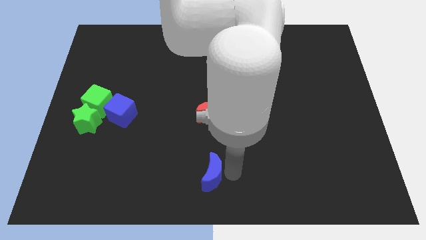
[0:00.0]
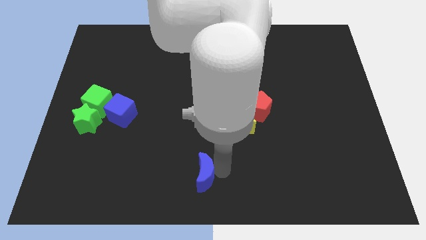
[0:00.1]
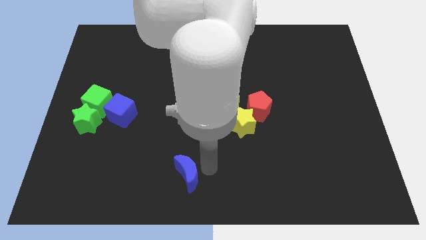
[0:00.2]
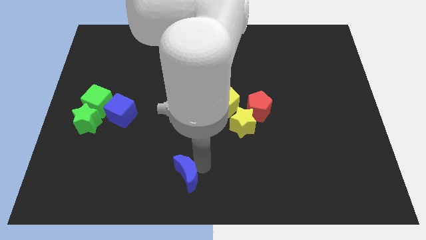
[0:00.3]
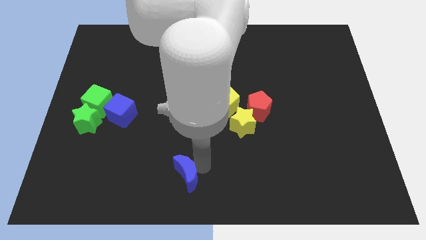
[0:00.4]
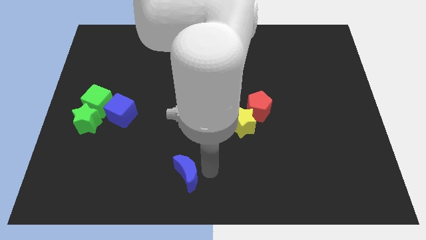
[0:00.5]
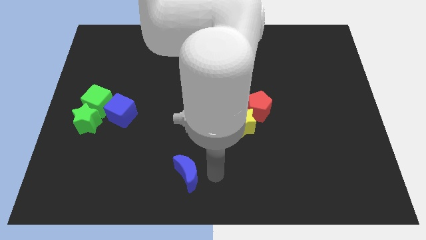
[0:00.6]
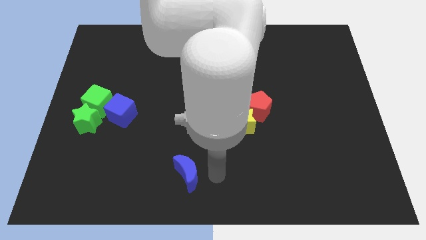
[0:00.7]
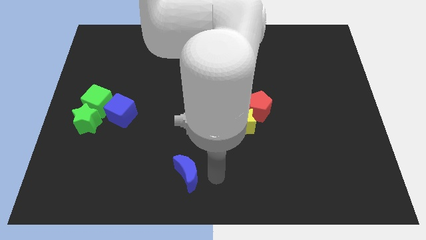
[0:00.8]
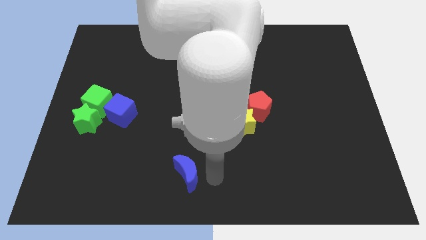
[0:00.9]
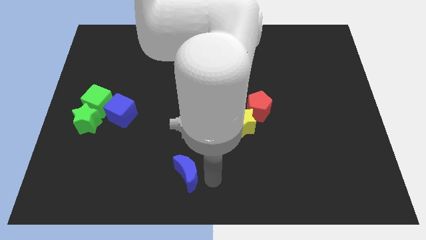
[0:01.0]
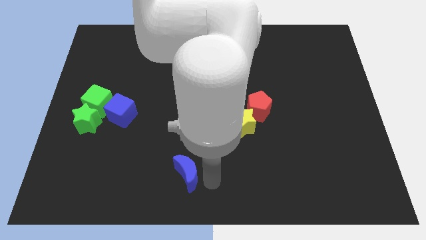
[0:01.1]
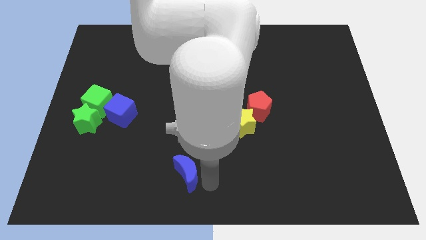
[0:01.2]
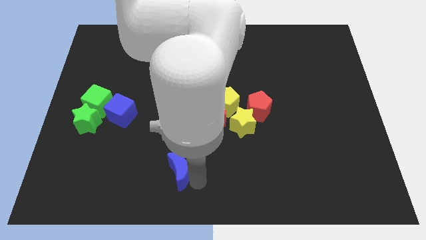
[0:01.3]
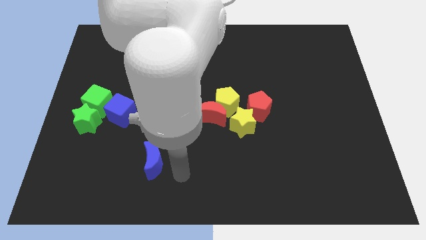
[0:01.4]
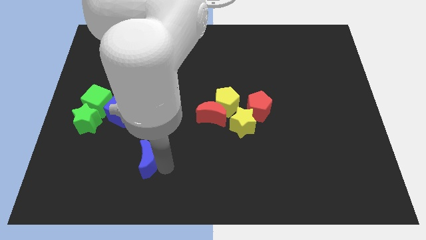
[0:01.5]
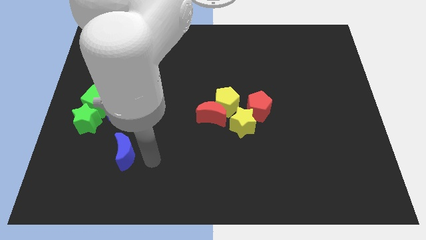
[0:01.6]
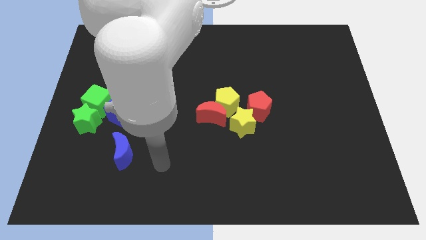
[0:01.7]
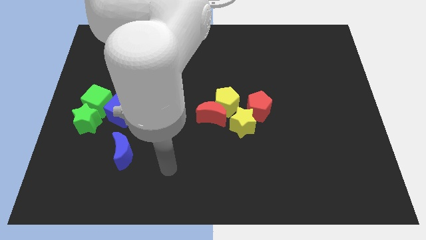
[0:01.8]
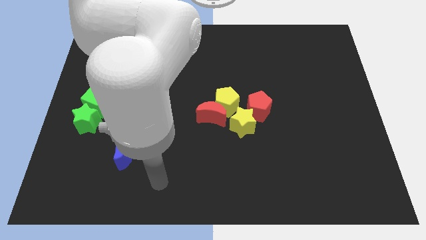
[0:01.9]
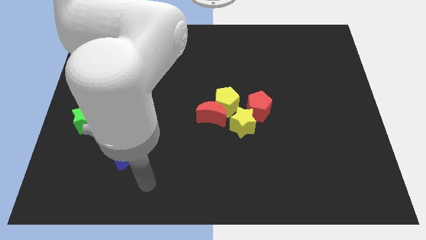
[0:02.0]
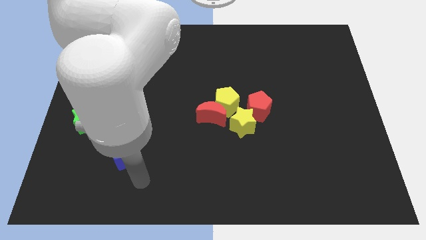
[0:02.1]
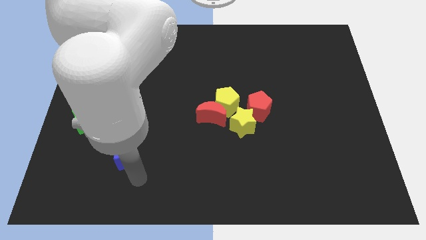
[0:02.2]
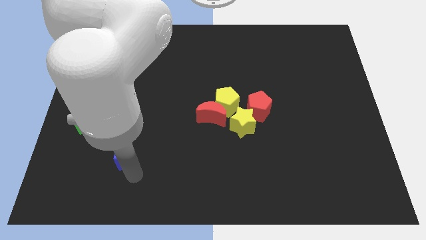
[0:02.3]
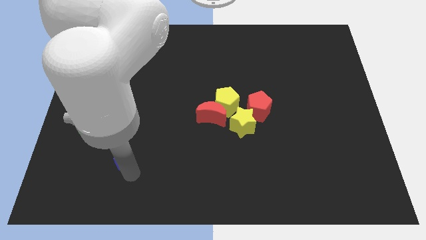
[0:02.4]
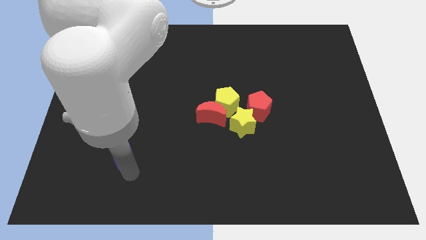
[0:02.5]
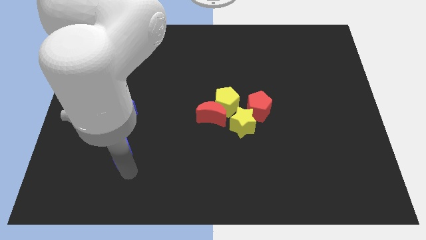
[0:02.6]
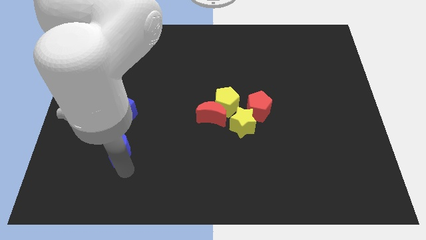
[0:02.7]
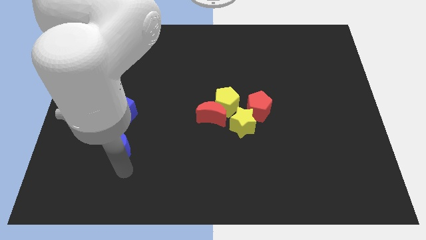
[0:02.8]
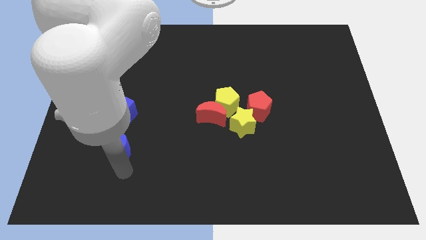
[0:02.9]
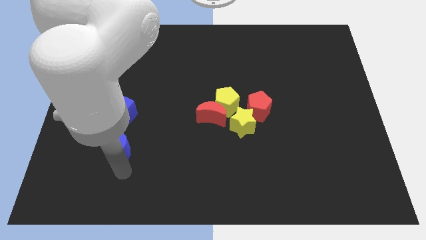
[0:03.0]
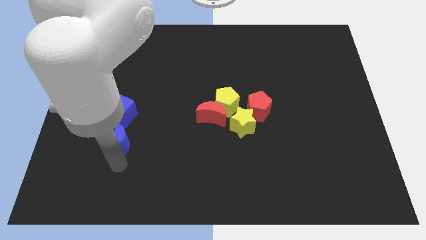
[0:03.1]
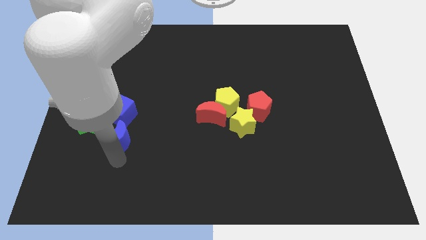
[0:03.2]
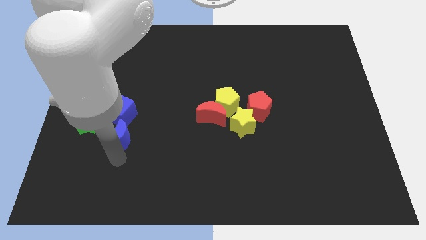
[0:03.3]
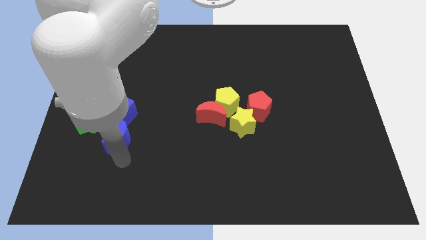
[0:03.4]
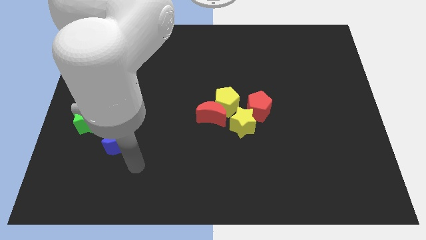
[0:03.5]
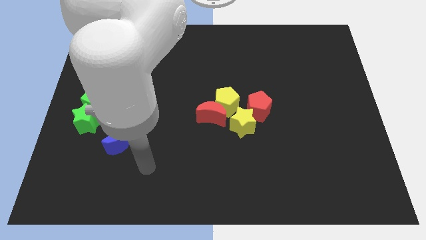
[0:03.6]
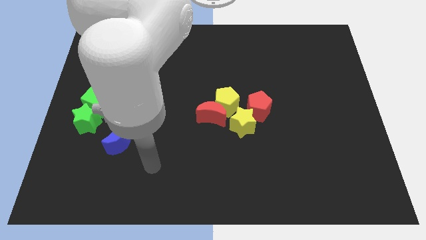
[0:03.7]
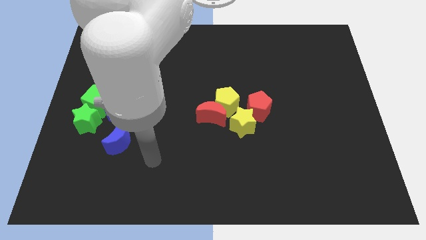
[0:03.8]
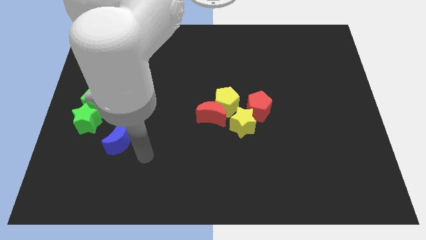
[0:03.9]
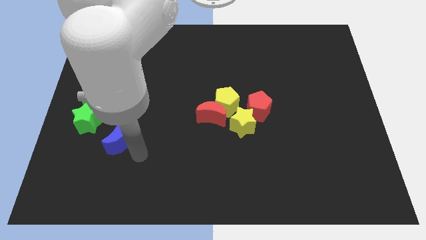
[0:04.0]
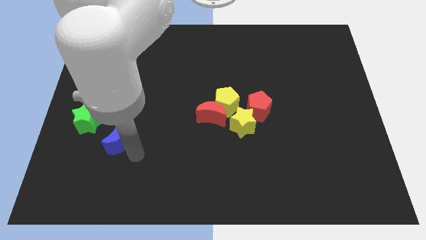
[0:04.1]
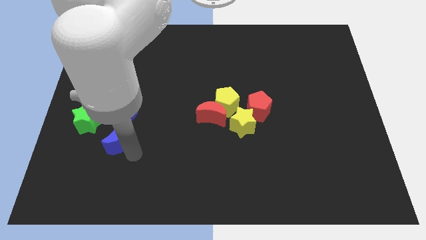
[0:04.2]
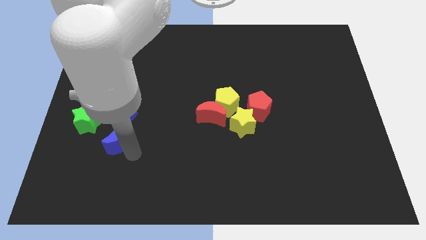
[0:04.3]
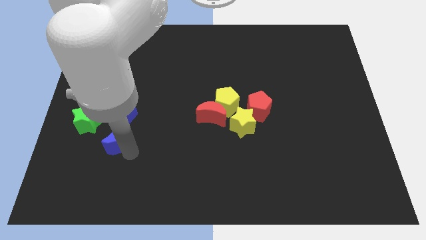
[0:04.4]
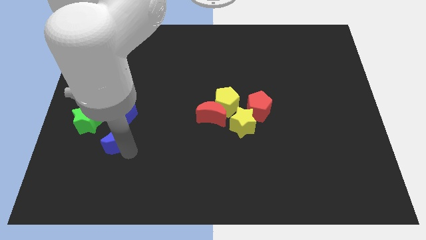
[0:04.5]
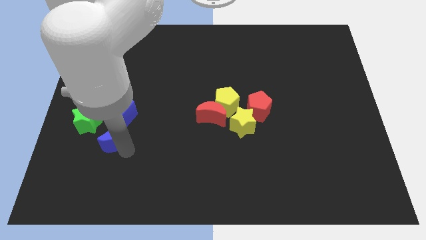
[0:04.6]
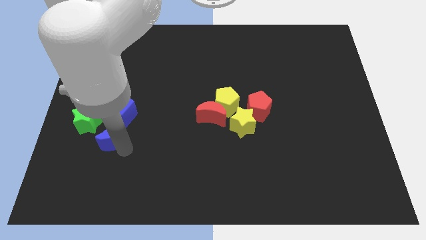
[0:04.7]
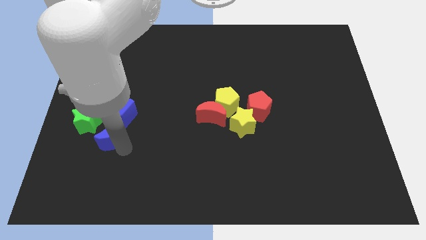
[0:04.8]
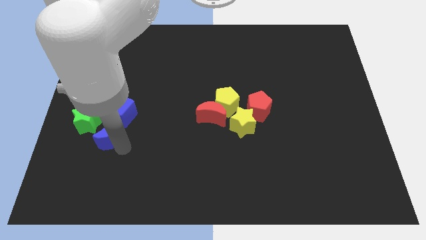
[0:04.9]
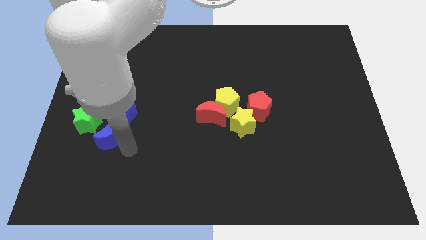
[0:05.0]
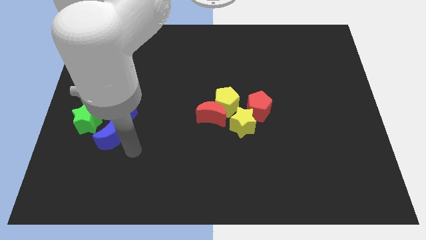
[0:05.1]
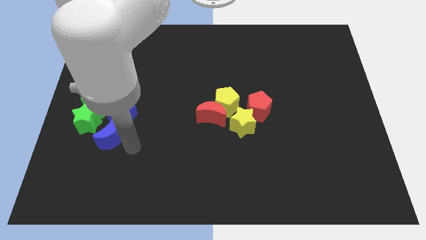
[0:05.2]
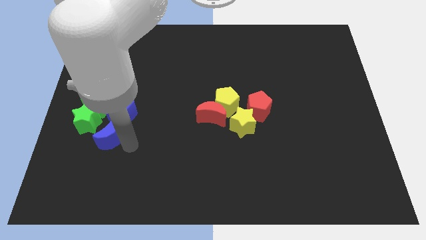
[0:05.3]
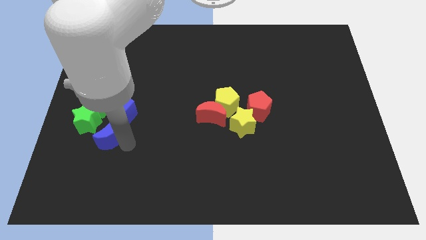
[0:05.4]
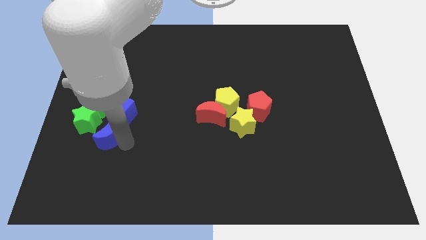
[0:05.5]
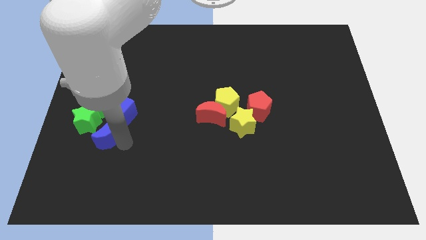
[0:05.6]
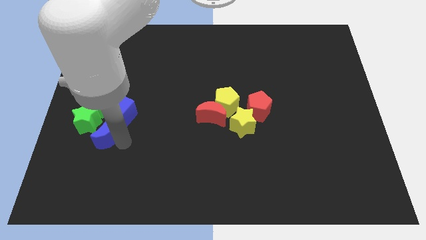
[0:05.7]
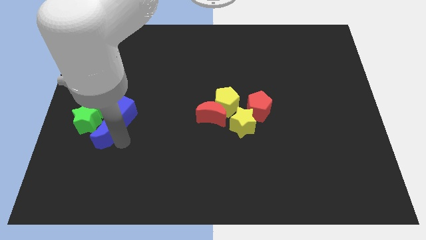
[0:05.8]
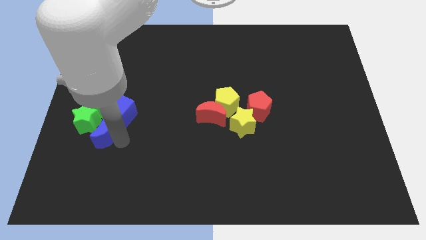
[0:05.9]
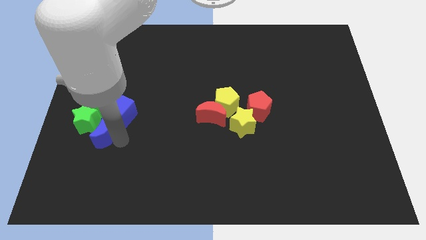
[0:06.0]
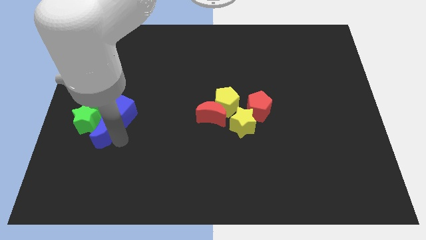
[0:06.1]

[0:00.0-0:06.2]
push the blue crescent into the group of blocks at the left

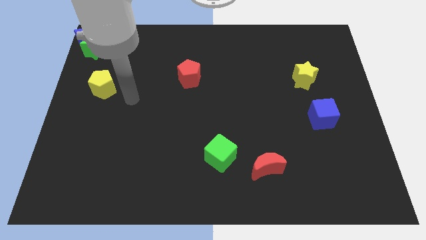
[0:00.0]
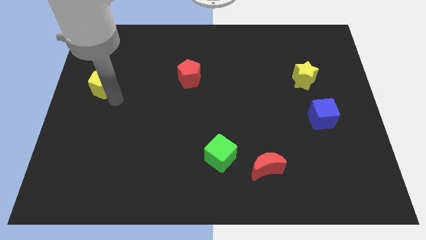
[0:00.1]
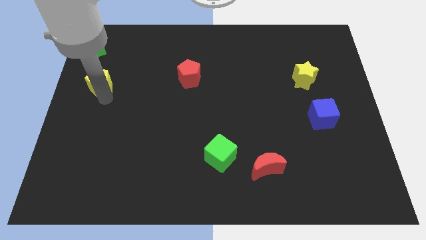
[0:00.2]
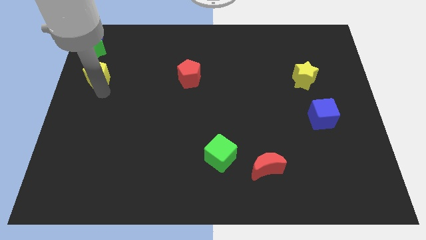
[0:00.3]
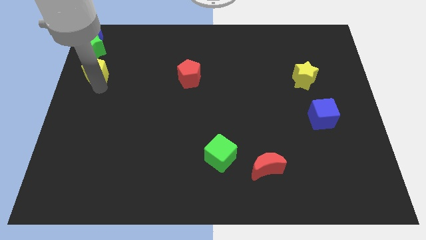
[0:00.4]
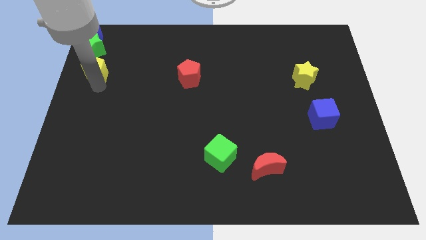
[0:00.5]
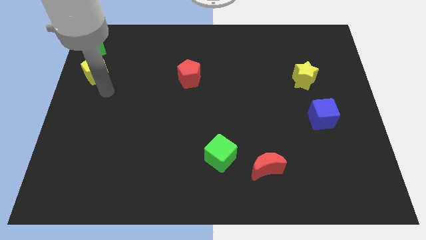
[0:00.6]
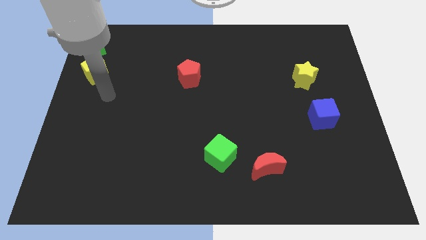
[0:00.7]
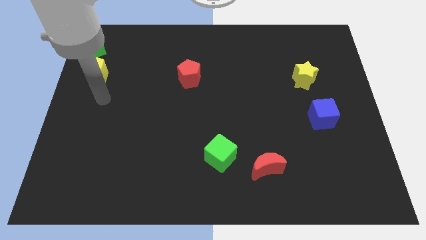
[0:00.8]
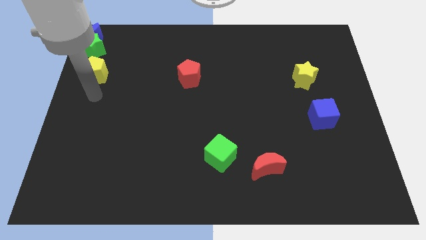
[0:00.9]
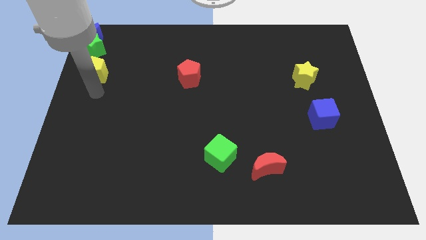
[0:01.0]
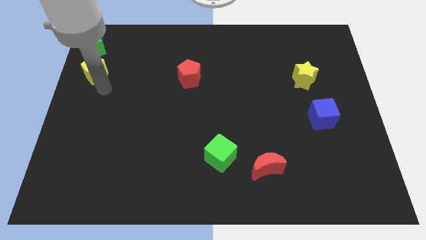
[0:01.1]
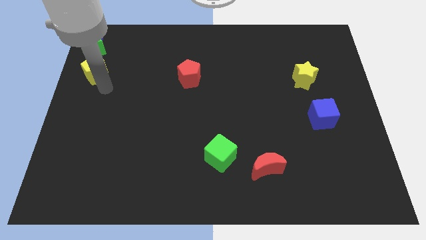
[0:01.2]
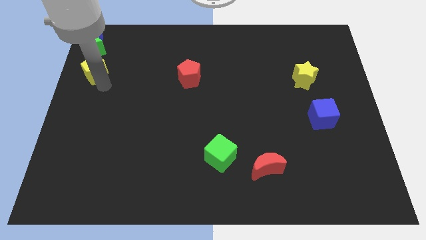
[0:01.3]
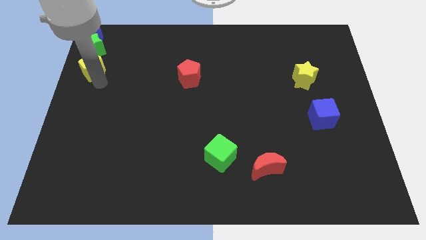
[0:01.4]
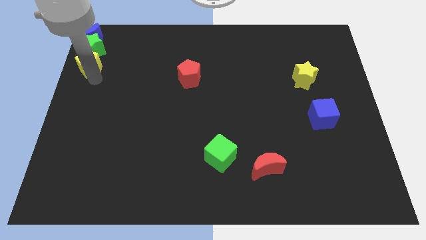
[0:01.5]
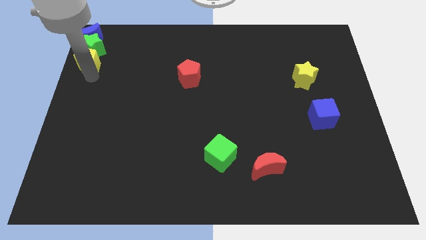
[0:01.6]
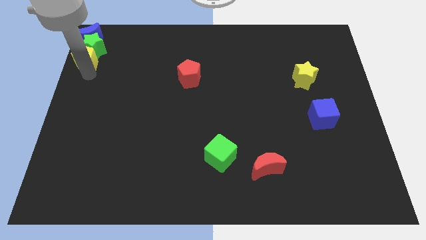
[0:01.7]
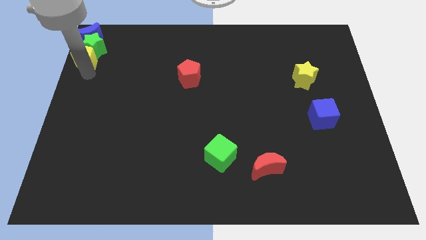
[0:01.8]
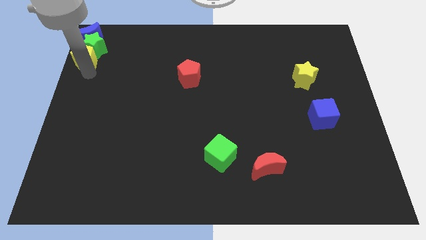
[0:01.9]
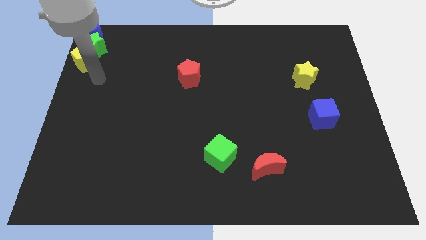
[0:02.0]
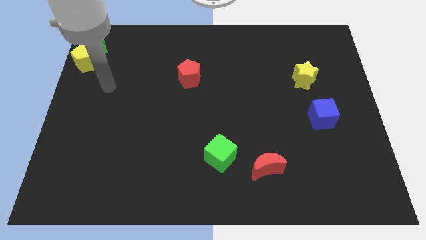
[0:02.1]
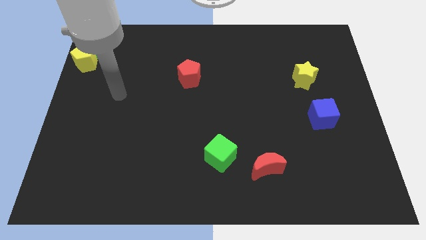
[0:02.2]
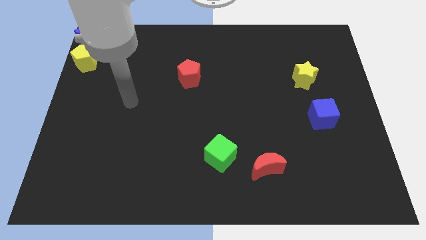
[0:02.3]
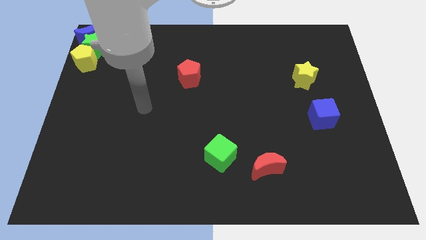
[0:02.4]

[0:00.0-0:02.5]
move the yellow pentagon to the bottom of the green star

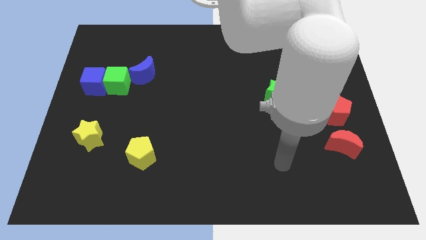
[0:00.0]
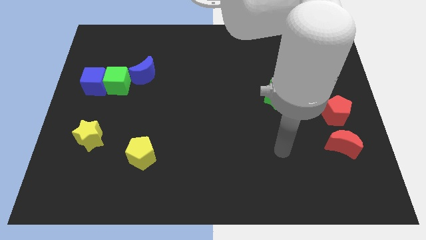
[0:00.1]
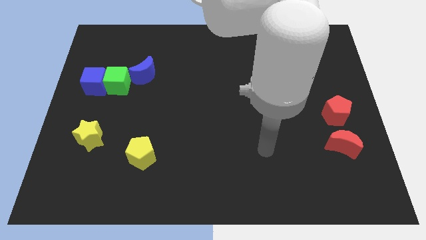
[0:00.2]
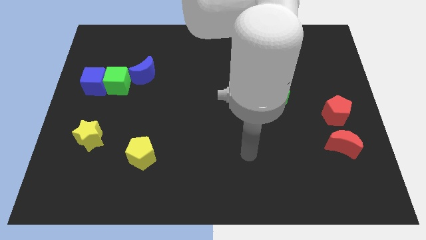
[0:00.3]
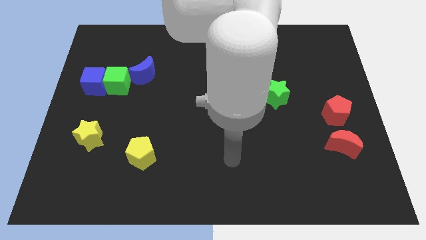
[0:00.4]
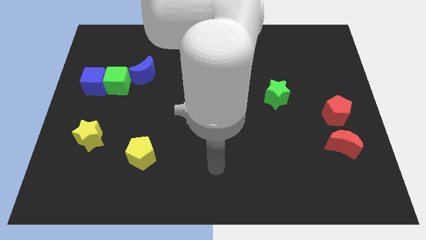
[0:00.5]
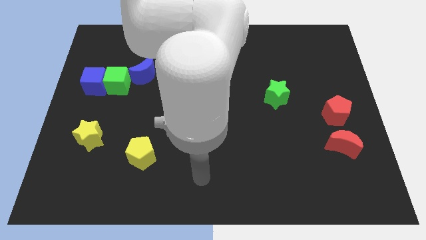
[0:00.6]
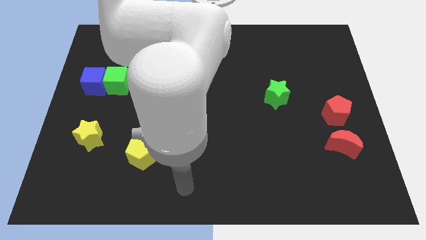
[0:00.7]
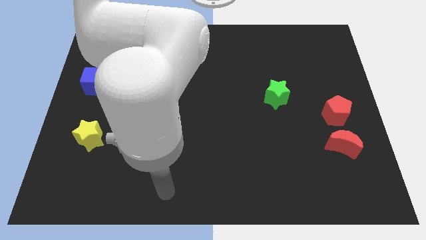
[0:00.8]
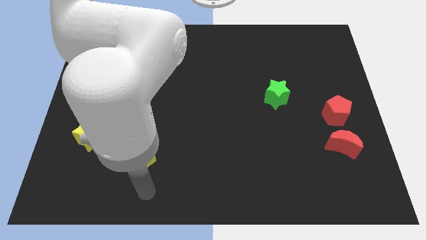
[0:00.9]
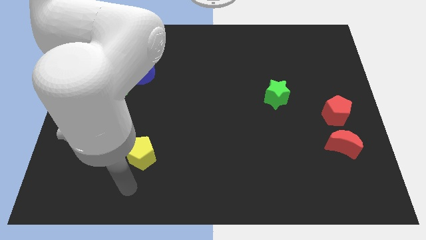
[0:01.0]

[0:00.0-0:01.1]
point your arm below yellow pentagon
